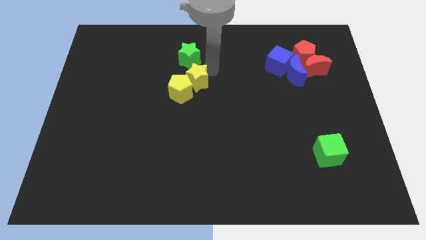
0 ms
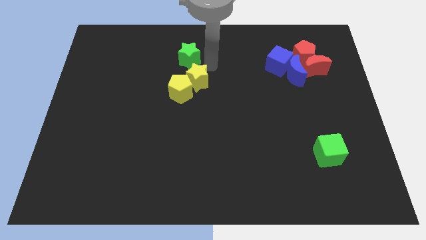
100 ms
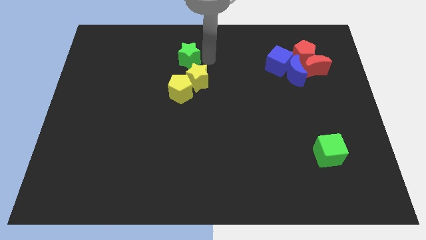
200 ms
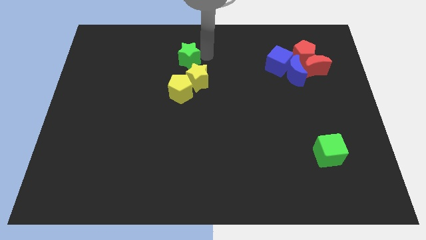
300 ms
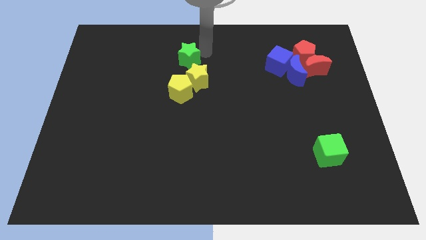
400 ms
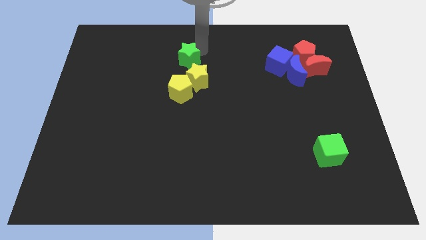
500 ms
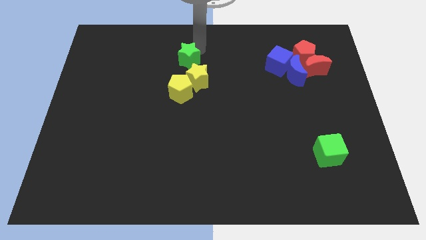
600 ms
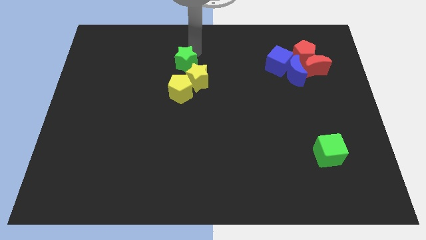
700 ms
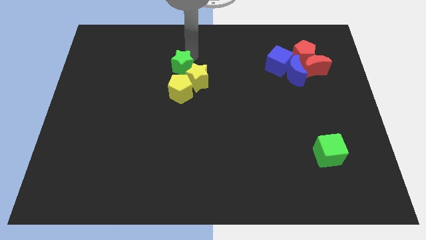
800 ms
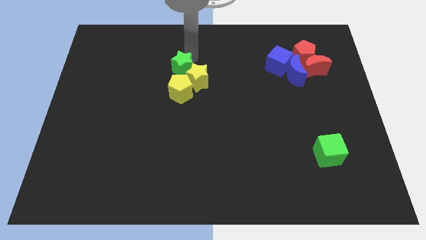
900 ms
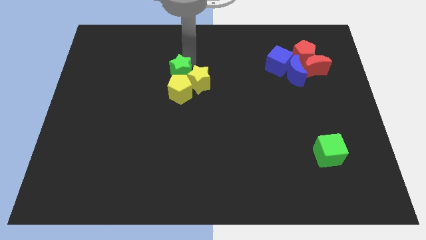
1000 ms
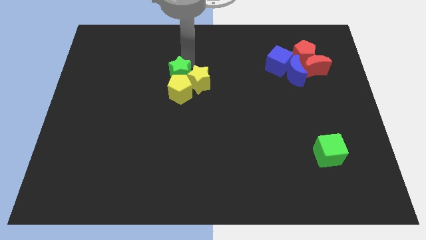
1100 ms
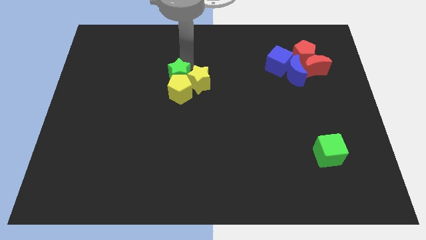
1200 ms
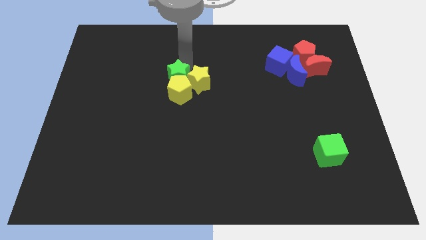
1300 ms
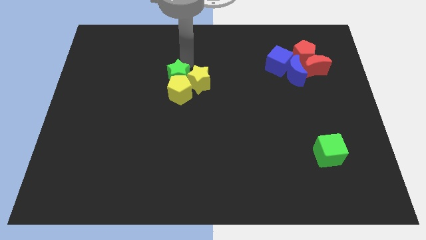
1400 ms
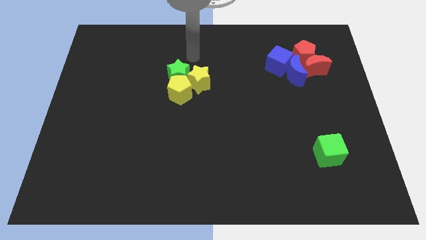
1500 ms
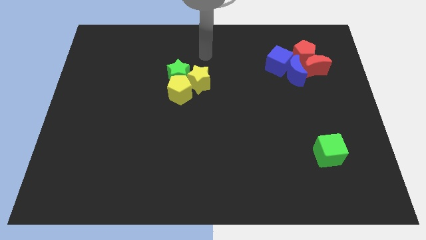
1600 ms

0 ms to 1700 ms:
move the green star towards the yellow pentagon

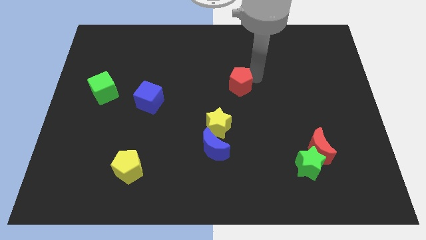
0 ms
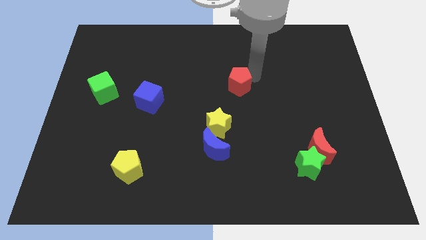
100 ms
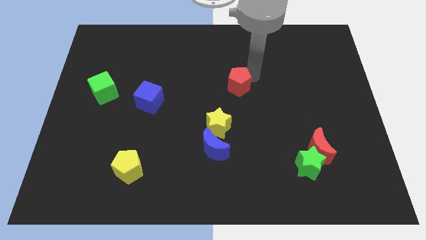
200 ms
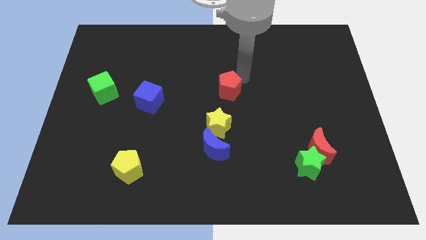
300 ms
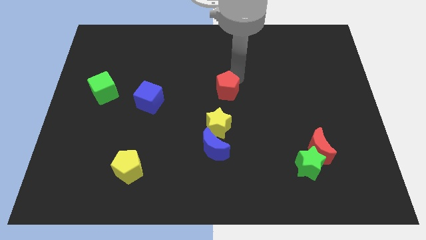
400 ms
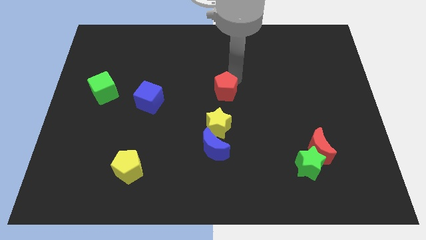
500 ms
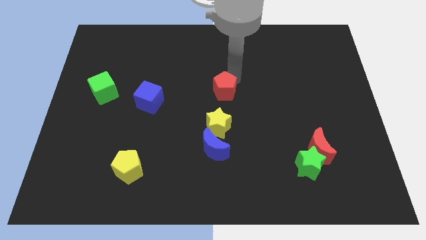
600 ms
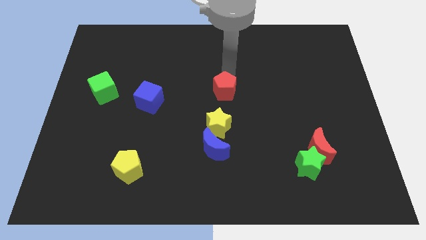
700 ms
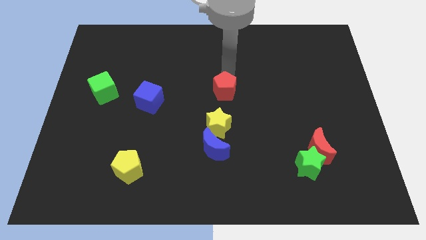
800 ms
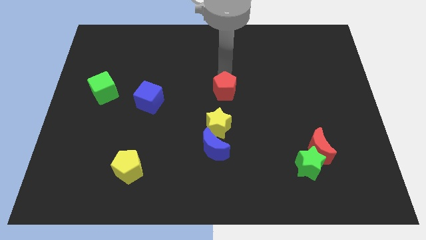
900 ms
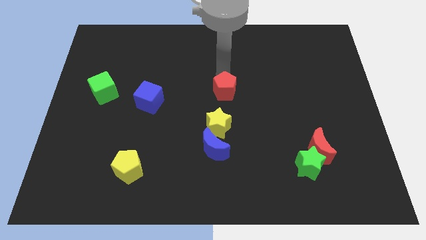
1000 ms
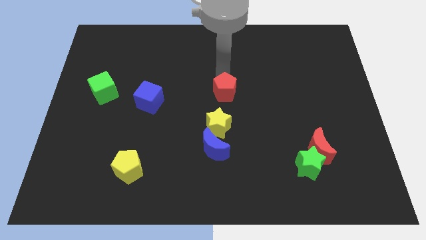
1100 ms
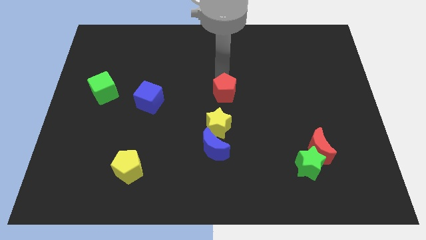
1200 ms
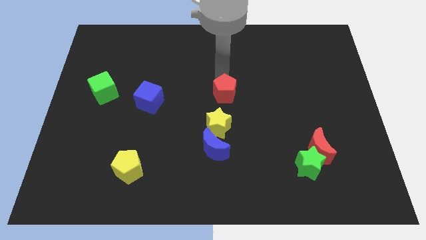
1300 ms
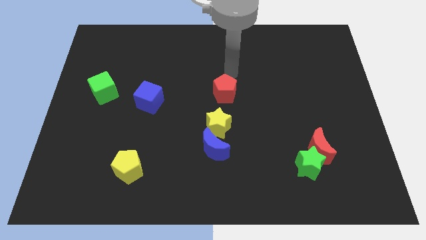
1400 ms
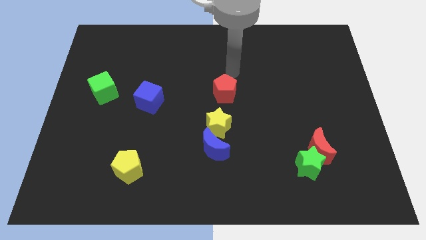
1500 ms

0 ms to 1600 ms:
place red pentagon to the top of yellow star

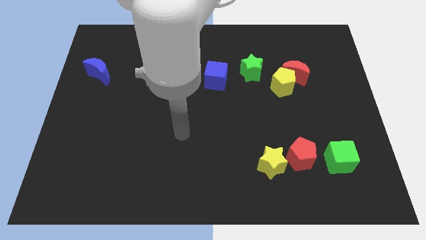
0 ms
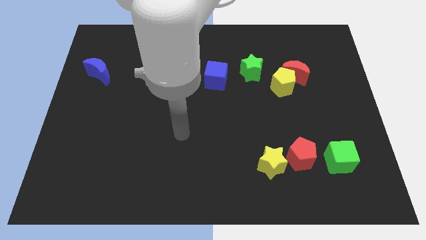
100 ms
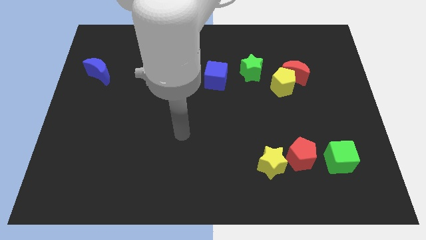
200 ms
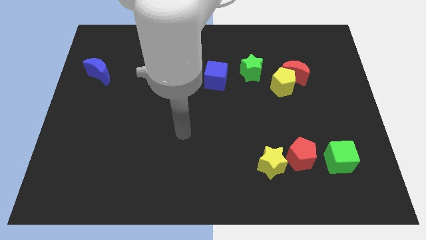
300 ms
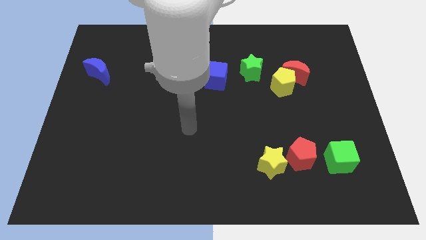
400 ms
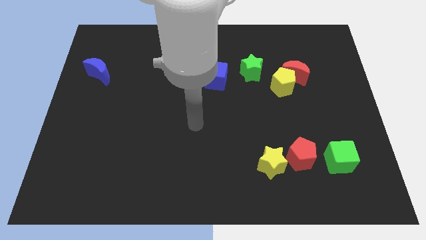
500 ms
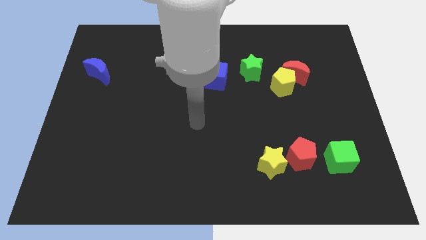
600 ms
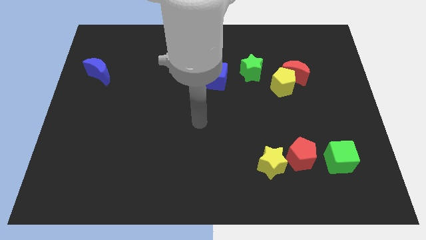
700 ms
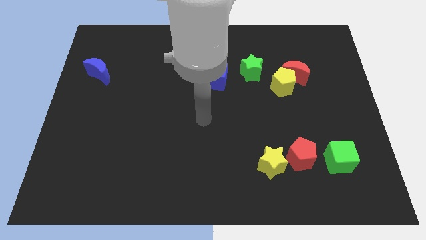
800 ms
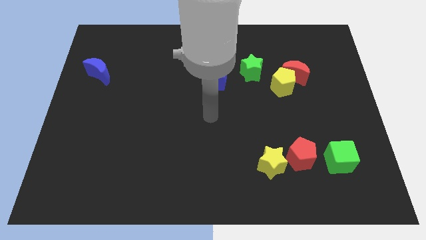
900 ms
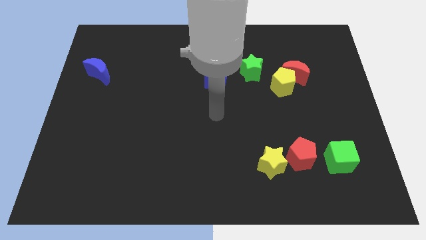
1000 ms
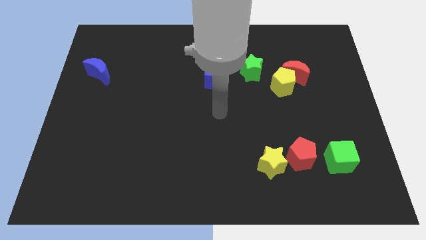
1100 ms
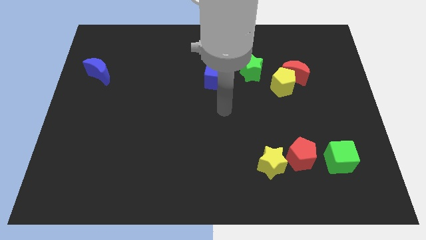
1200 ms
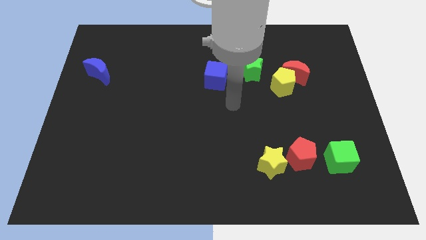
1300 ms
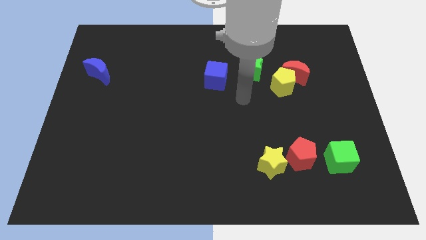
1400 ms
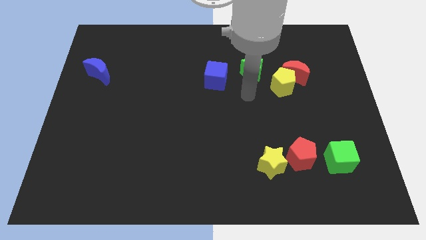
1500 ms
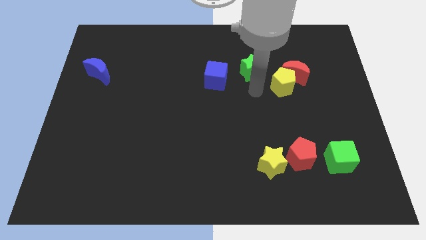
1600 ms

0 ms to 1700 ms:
place the arm below the green star

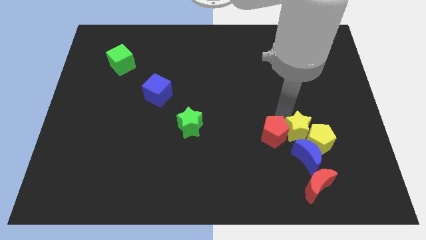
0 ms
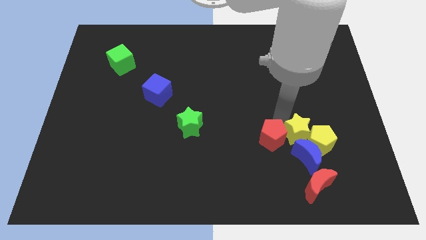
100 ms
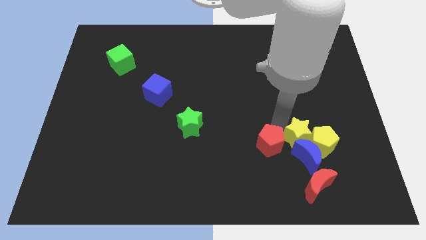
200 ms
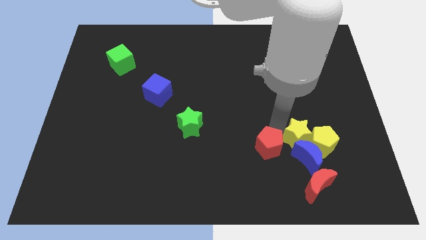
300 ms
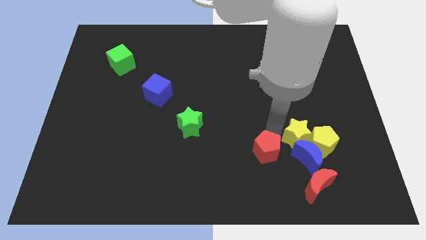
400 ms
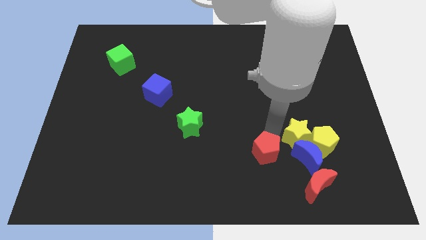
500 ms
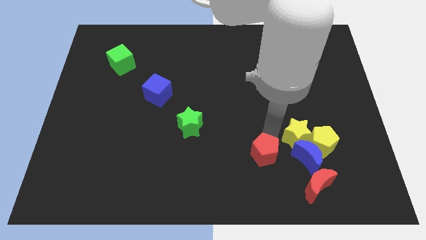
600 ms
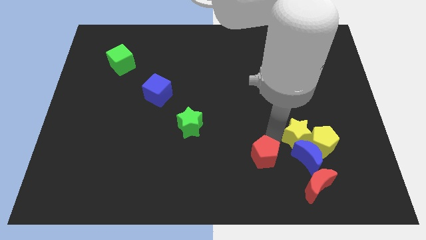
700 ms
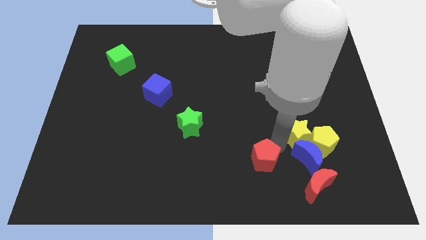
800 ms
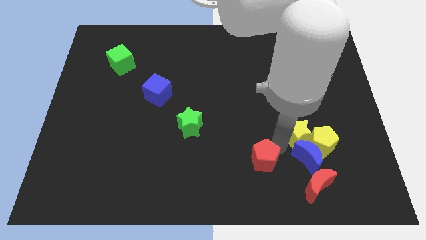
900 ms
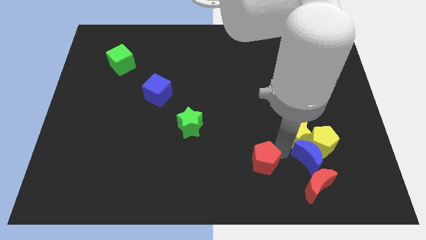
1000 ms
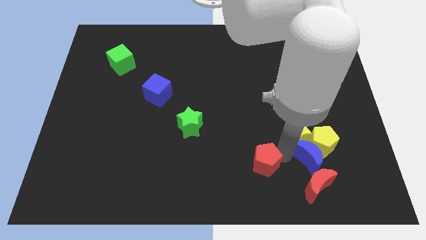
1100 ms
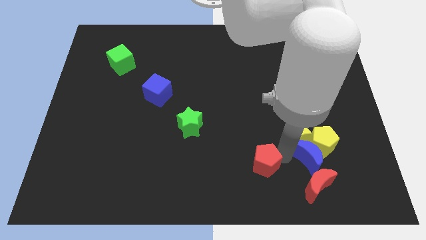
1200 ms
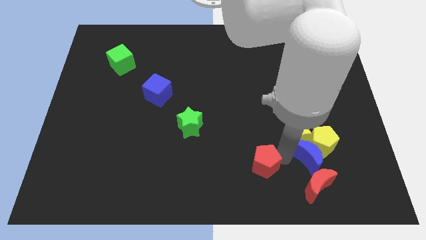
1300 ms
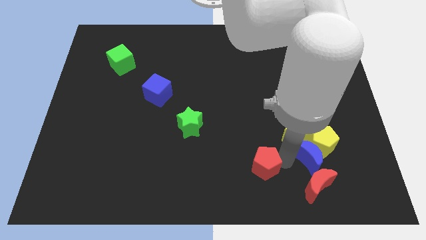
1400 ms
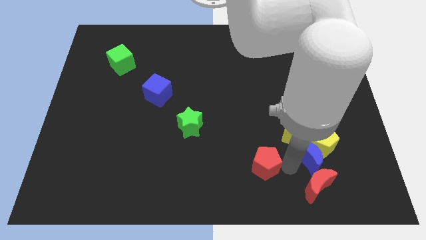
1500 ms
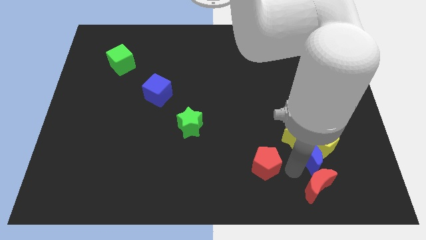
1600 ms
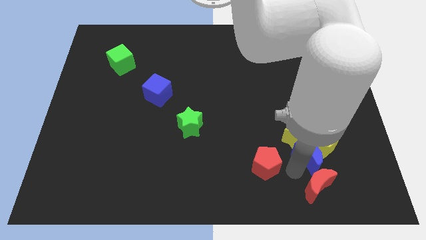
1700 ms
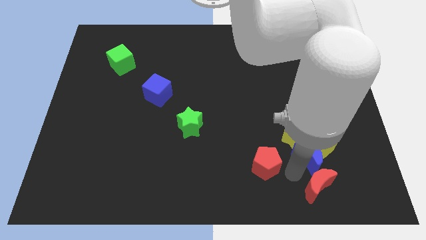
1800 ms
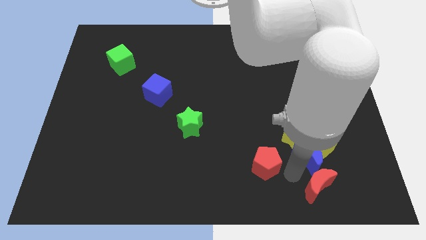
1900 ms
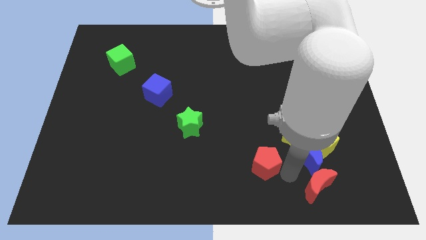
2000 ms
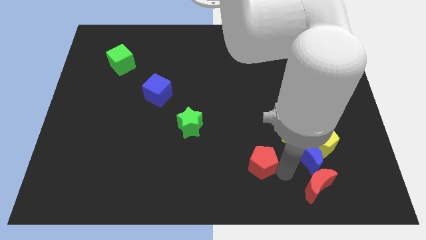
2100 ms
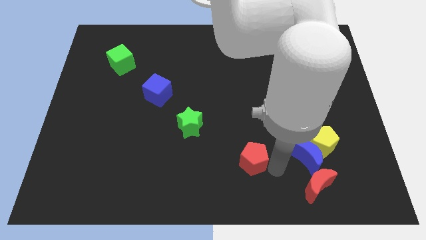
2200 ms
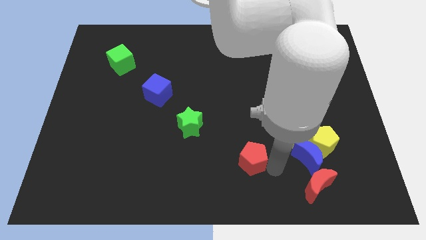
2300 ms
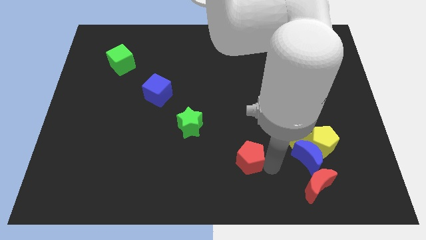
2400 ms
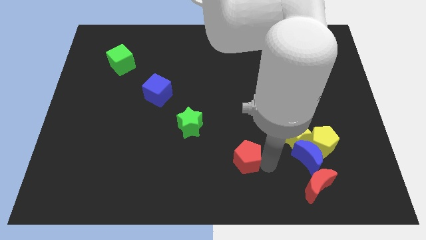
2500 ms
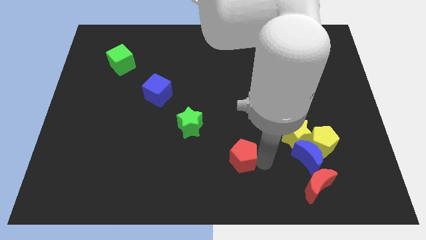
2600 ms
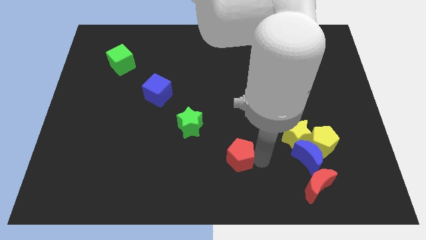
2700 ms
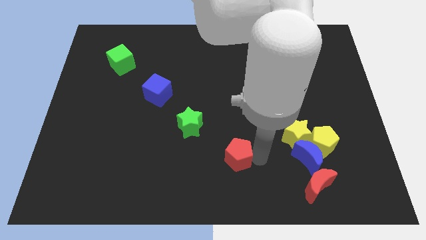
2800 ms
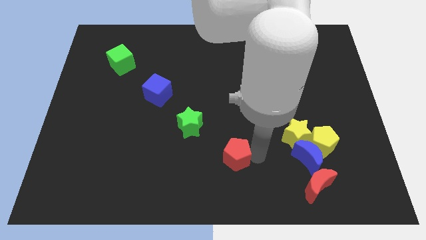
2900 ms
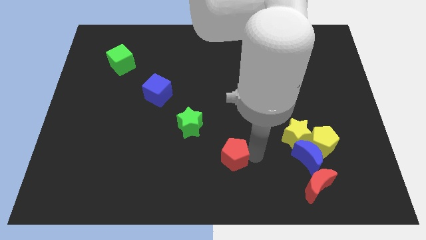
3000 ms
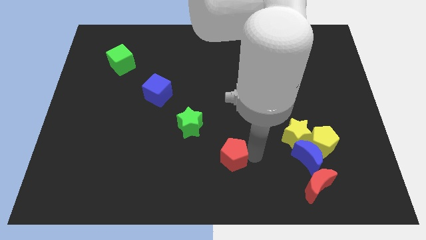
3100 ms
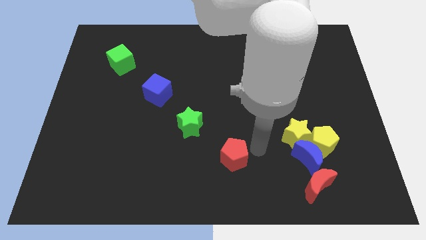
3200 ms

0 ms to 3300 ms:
put the red pentagon at the bottom right of the green star

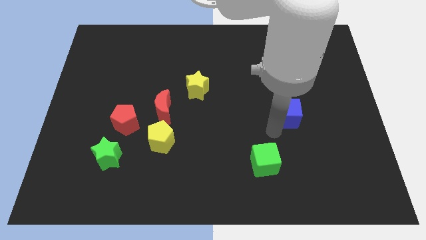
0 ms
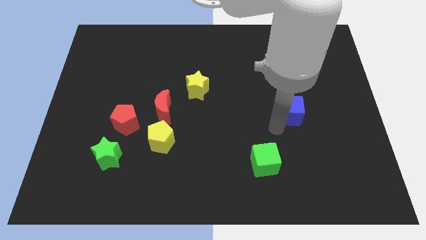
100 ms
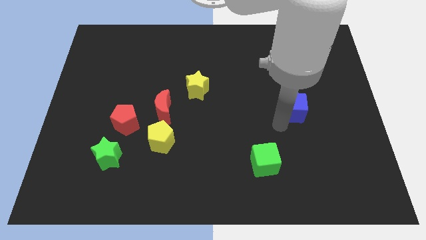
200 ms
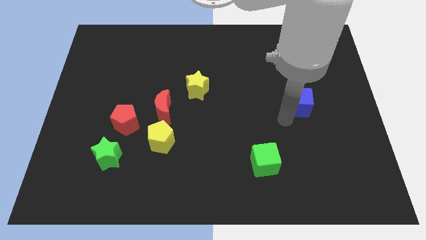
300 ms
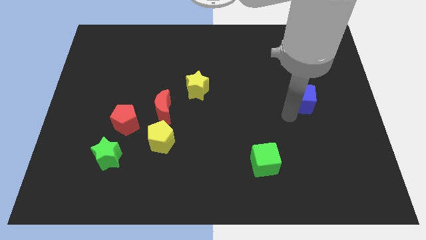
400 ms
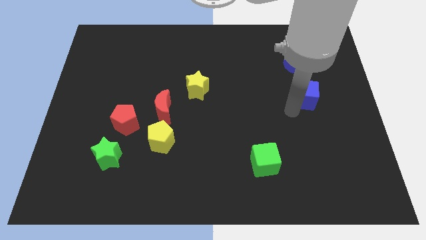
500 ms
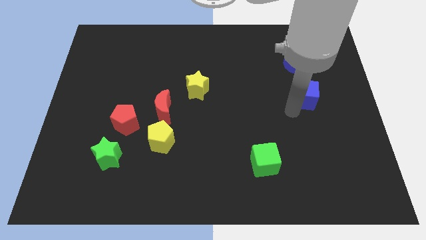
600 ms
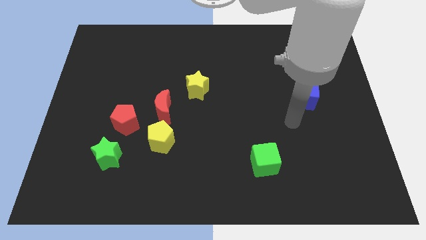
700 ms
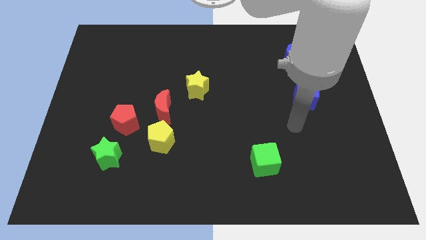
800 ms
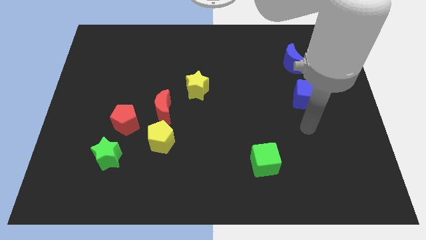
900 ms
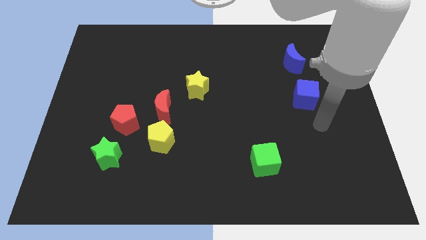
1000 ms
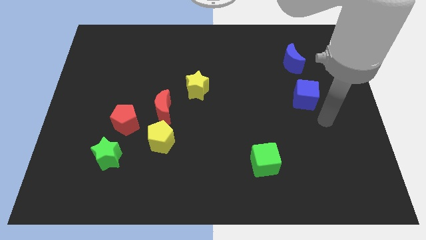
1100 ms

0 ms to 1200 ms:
place the blue cube below the blue crescent
